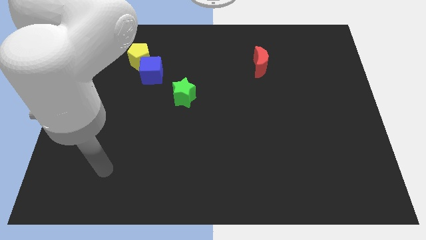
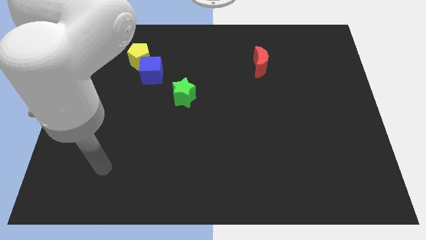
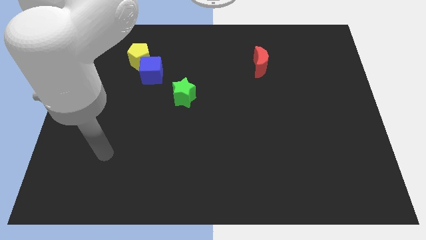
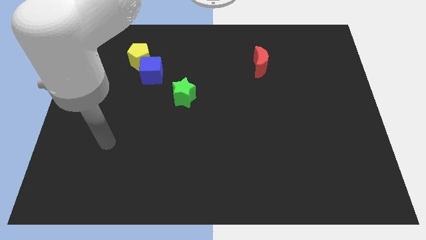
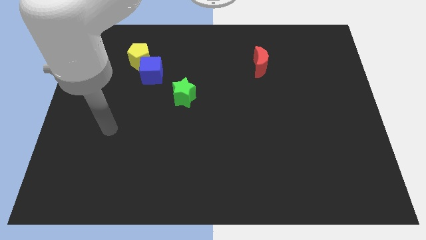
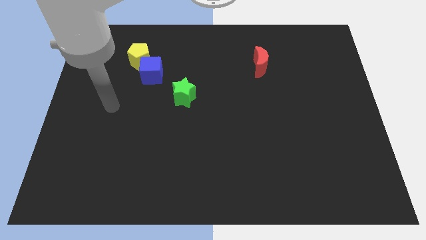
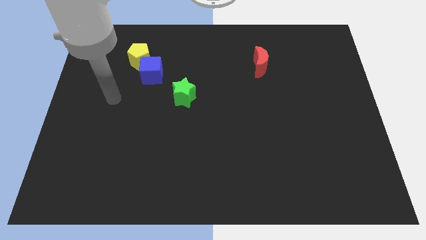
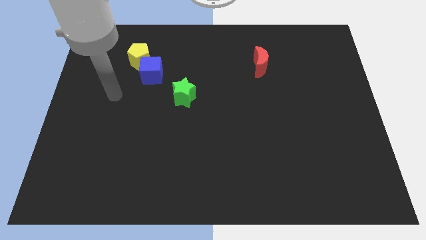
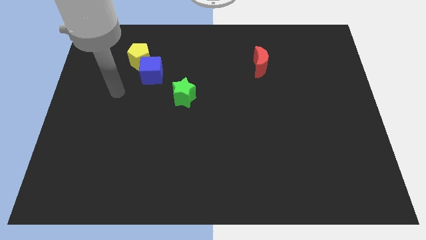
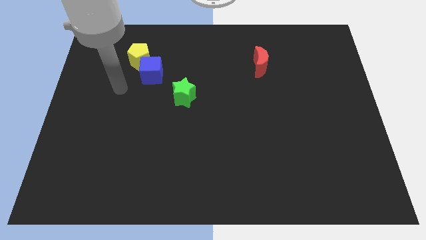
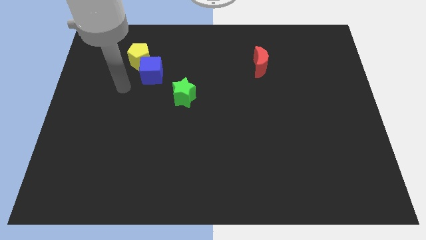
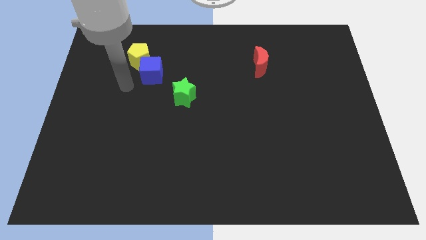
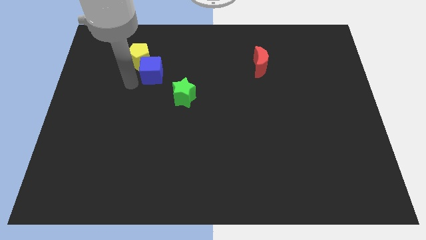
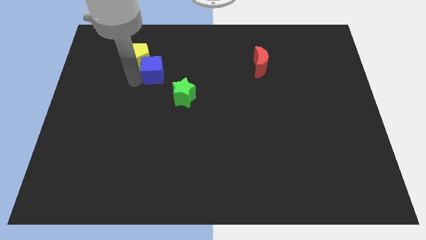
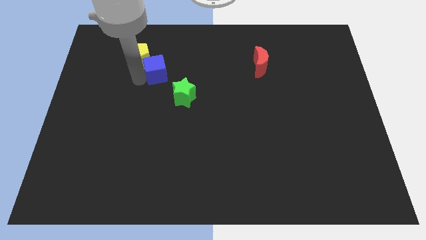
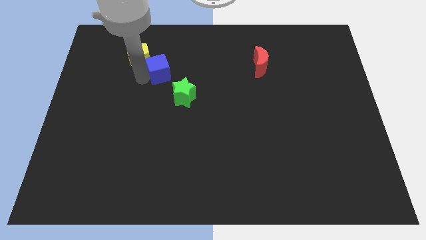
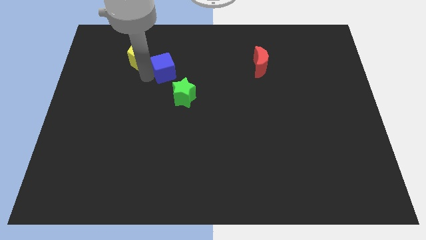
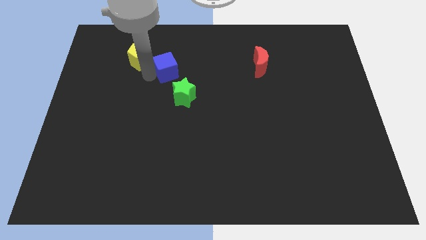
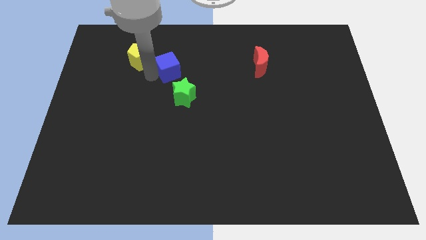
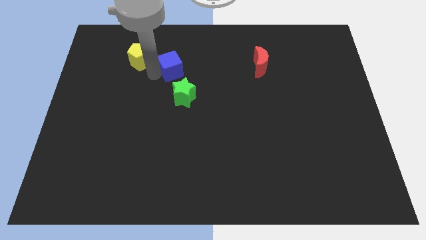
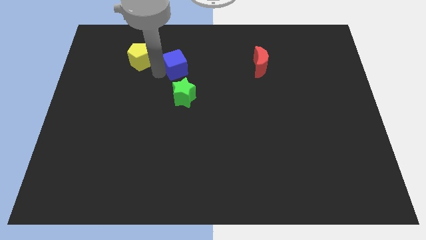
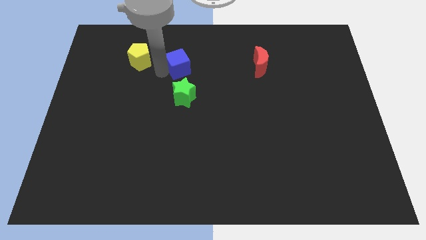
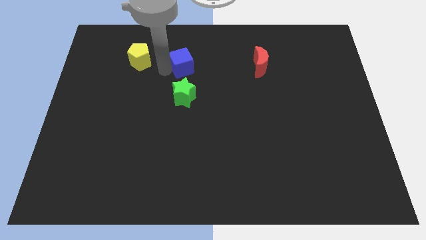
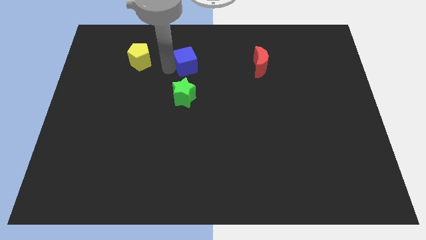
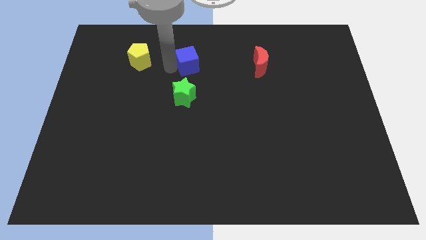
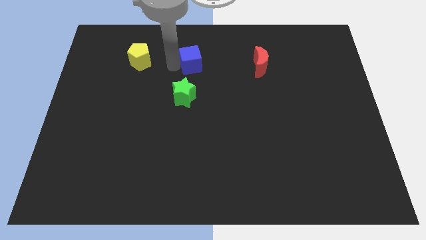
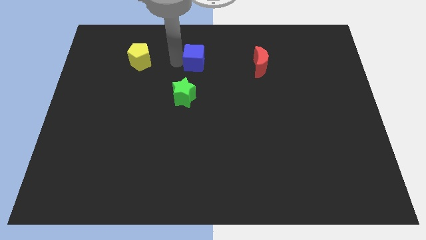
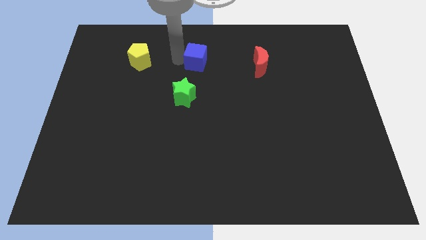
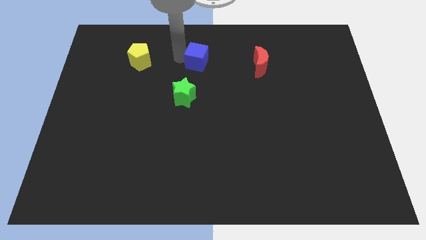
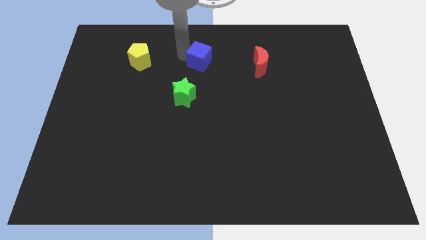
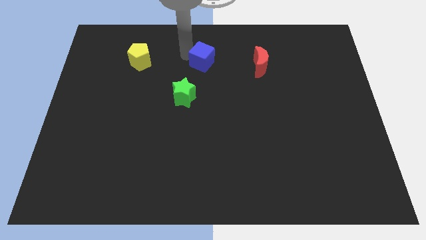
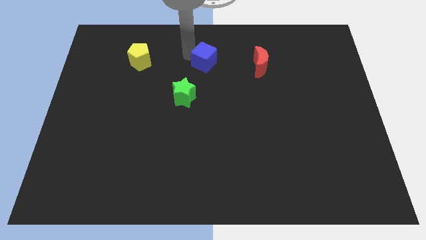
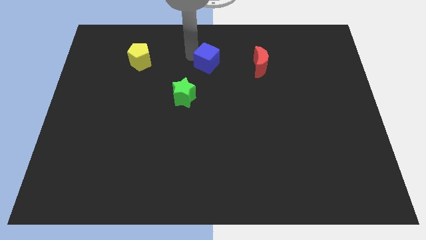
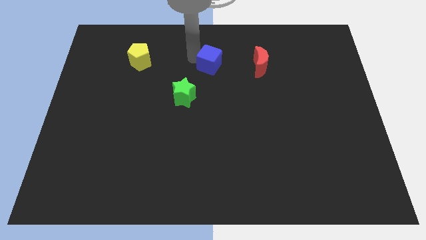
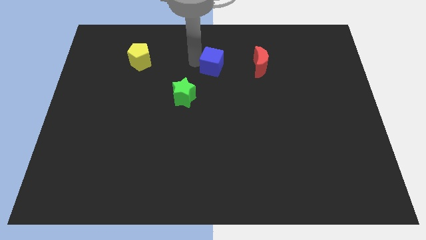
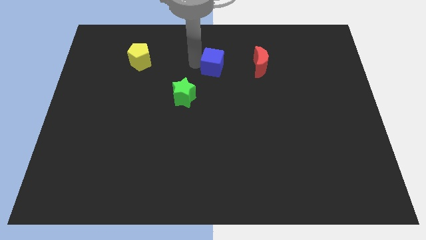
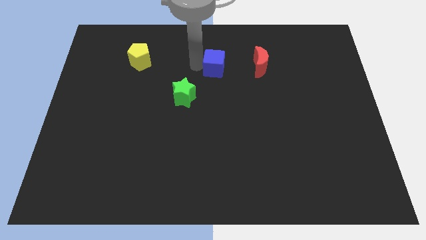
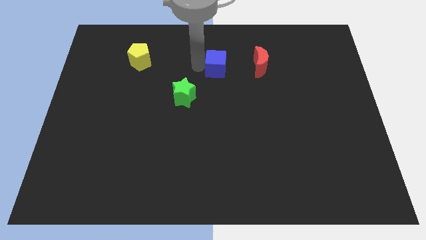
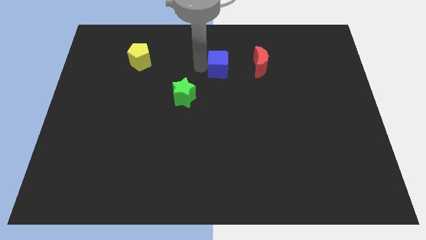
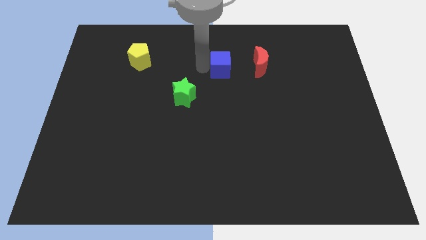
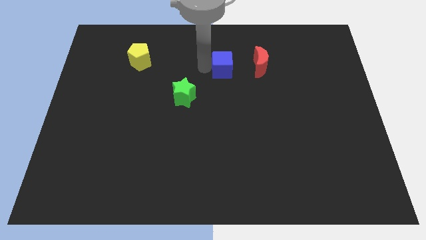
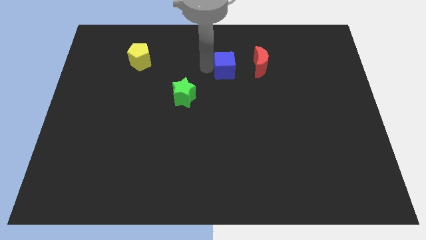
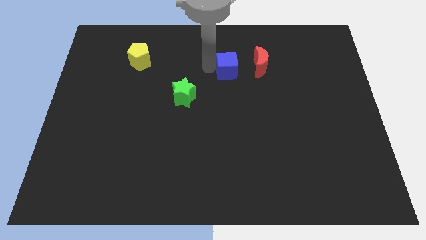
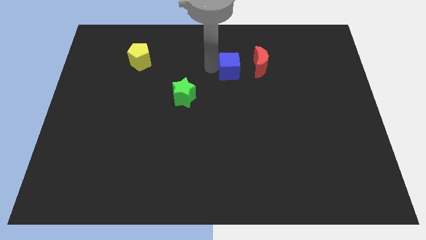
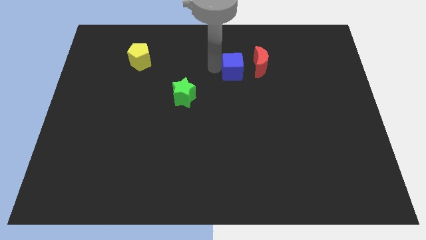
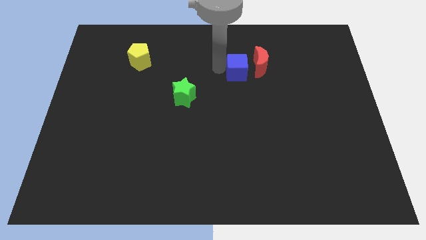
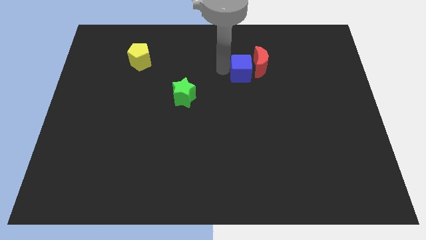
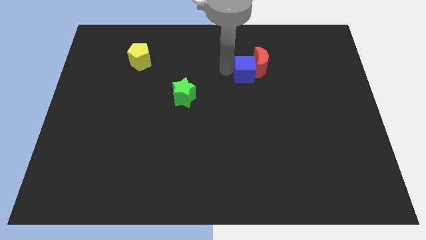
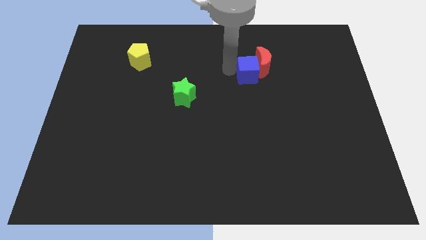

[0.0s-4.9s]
push the cube next to the moon

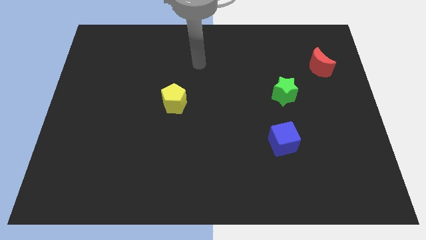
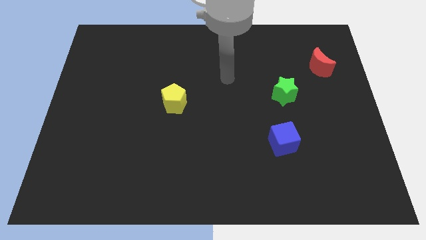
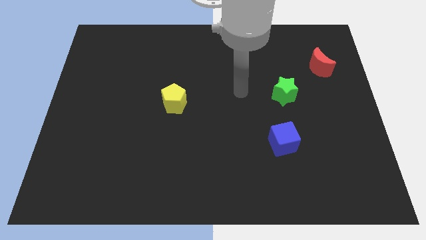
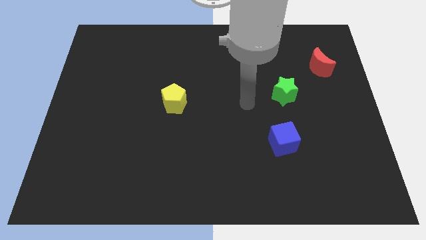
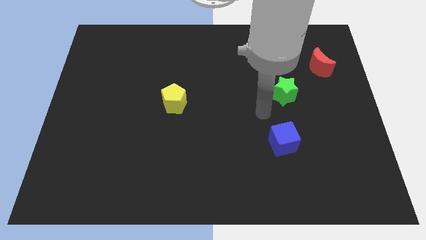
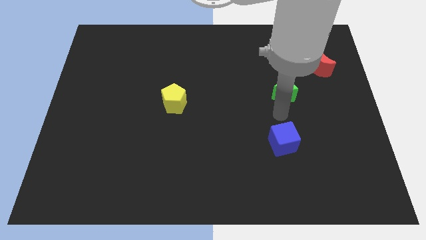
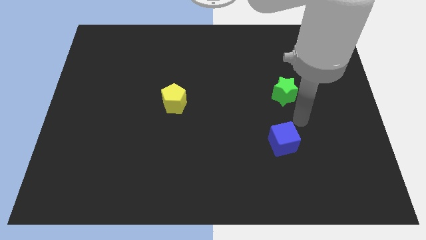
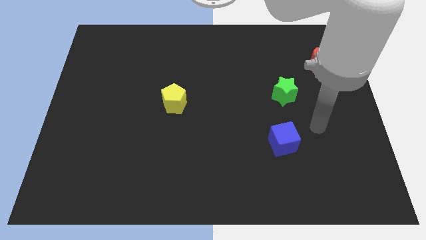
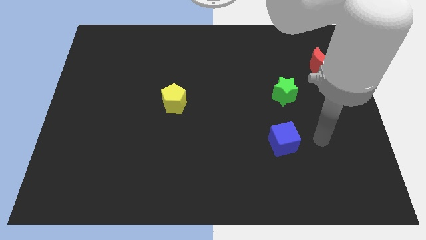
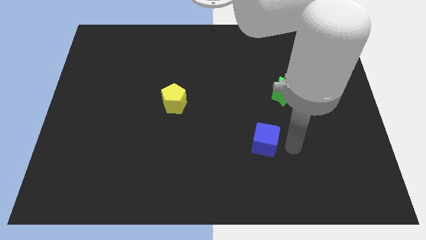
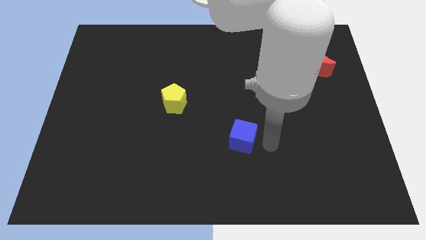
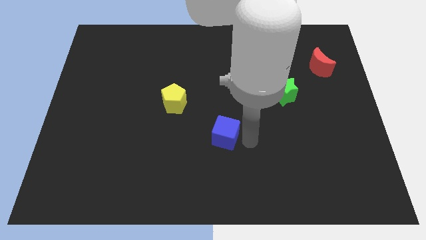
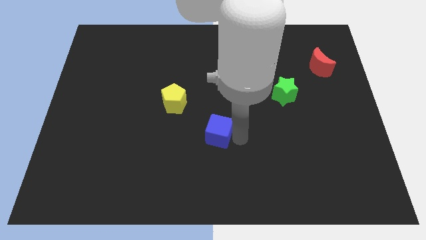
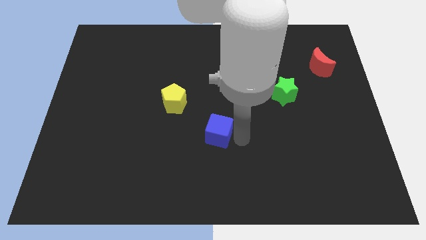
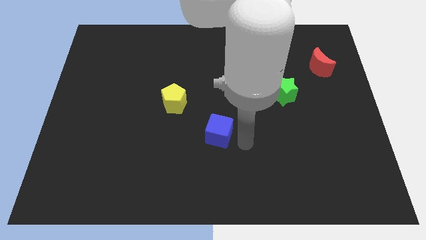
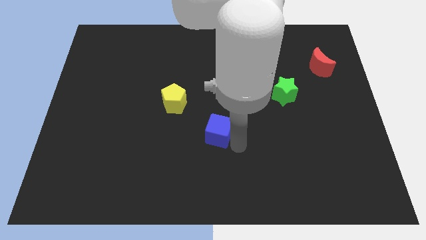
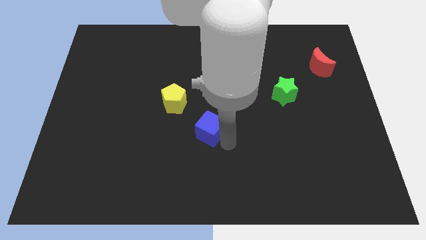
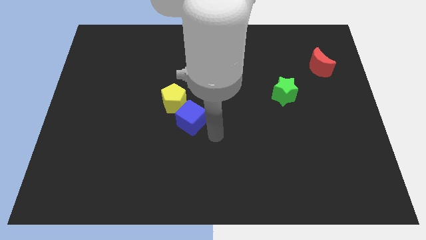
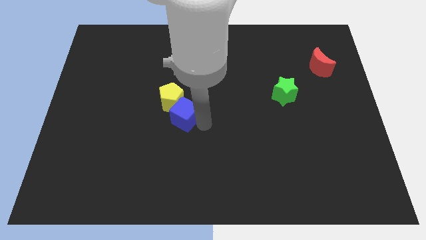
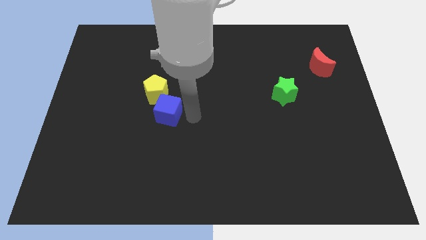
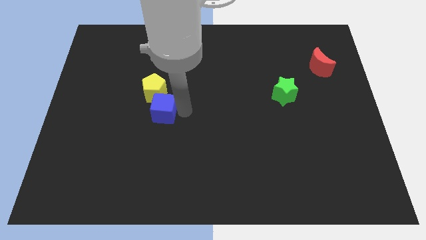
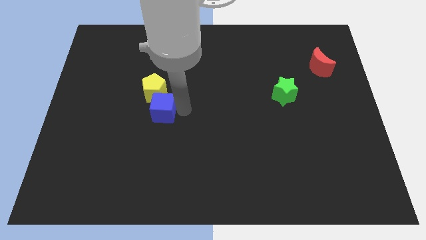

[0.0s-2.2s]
push the cube to the yellow block

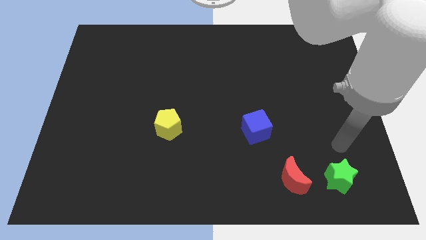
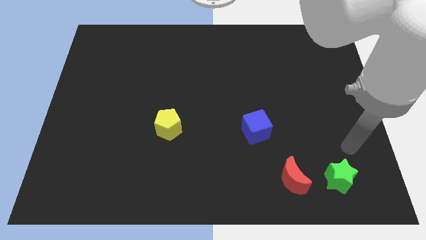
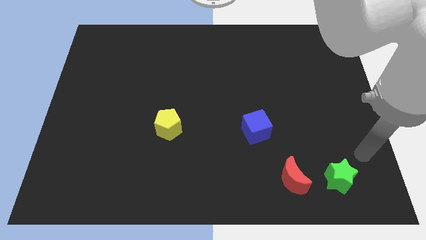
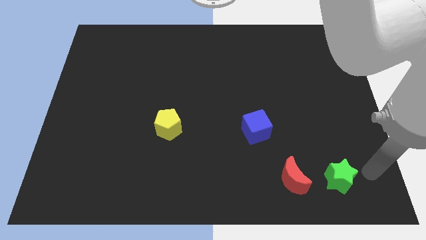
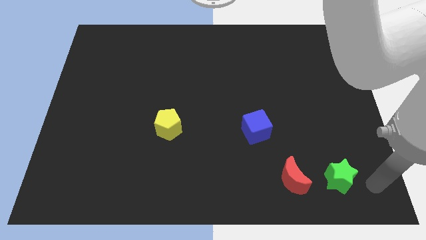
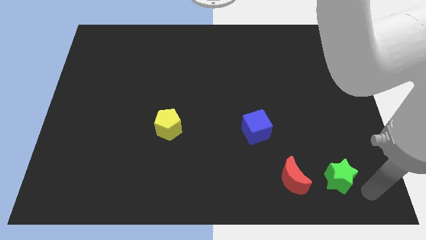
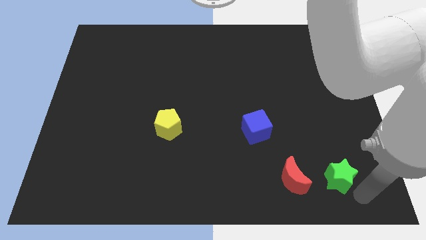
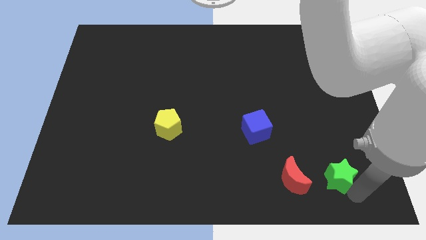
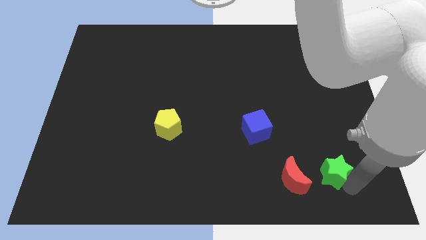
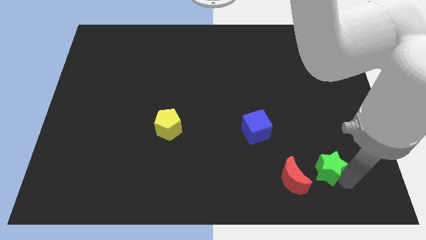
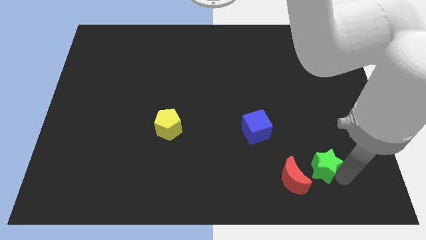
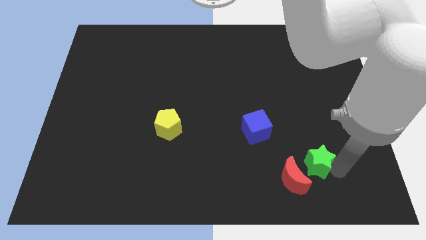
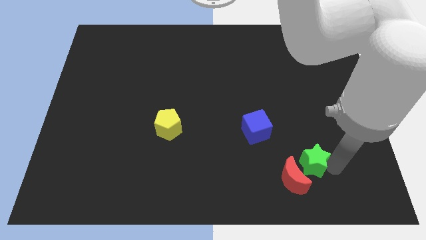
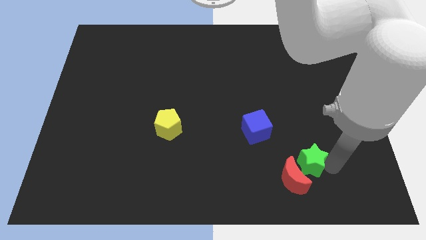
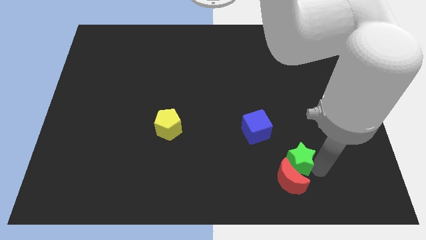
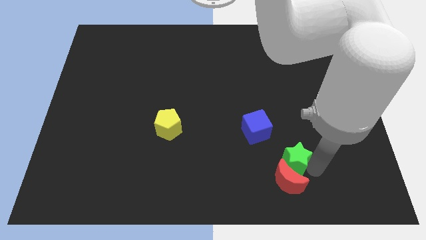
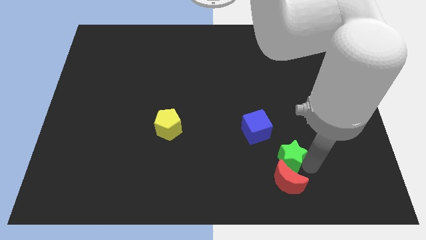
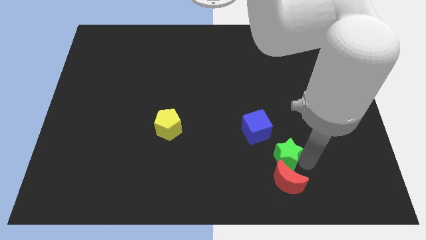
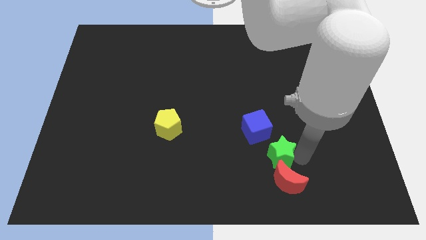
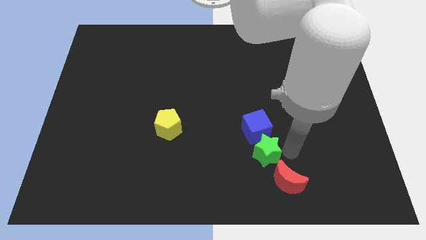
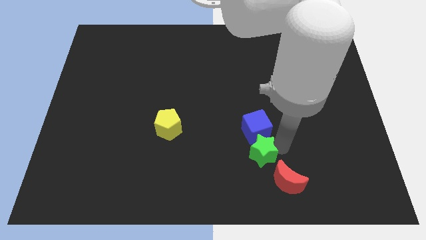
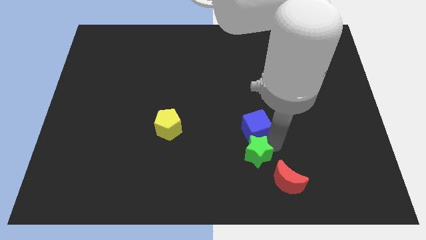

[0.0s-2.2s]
put the star close to the blue cube
